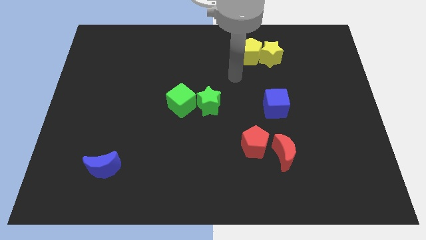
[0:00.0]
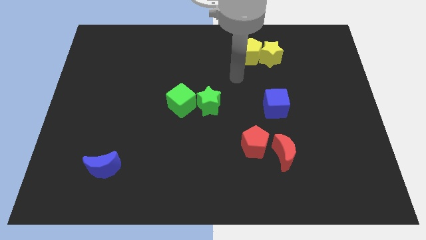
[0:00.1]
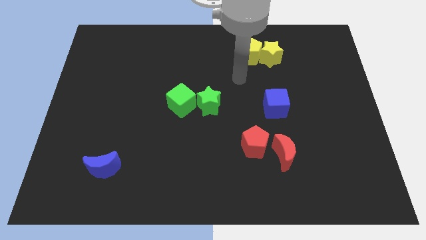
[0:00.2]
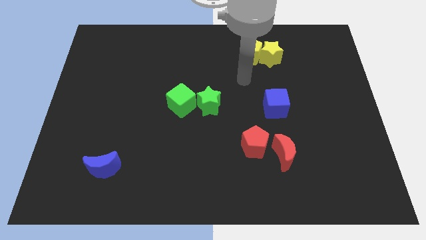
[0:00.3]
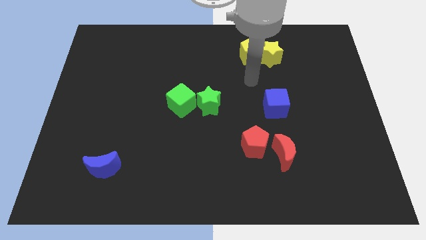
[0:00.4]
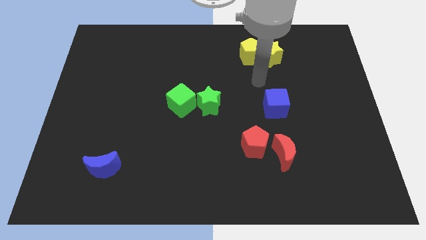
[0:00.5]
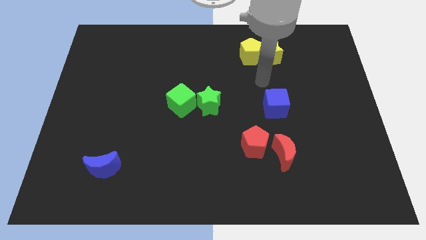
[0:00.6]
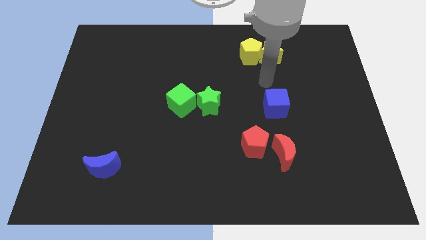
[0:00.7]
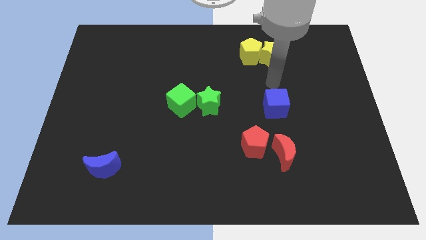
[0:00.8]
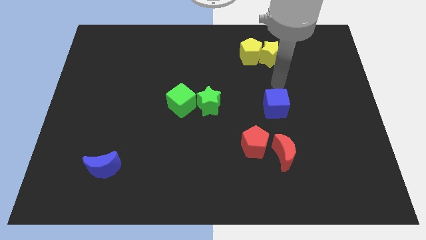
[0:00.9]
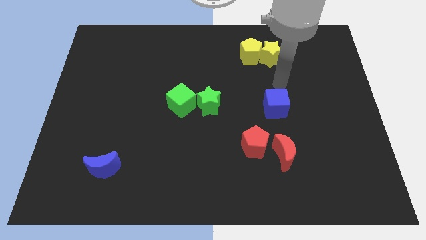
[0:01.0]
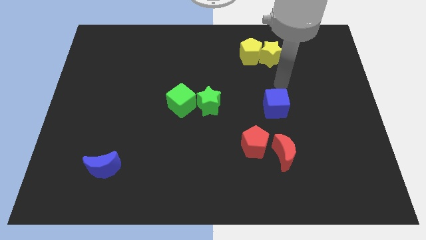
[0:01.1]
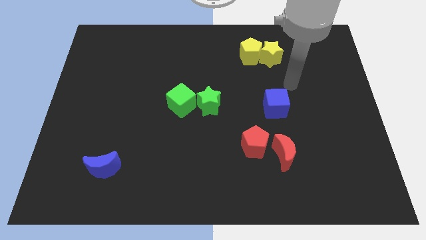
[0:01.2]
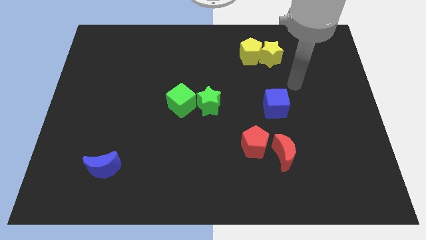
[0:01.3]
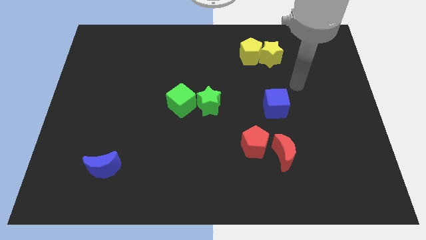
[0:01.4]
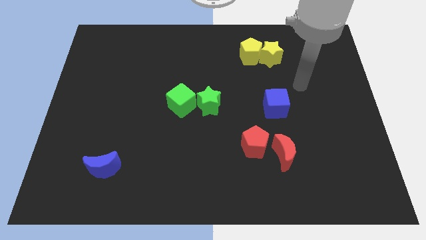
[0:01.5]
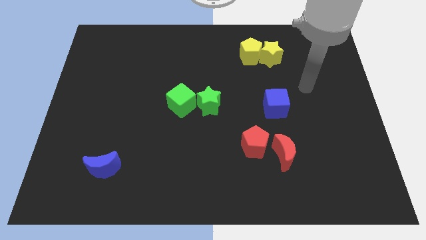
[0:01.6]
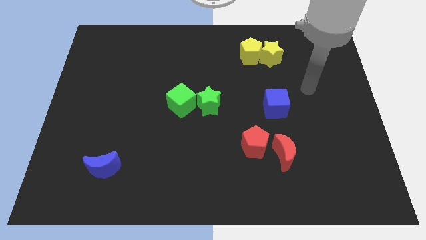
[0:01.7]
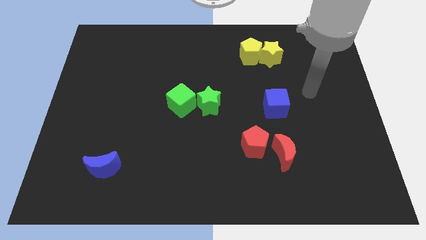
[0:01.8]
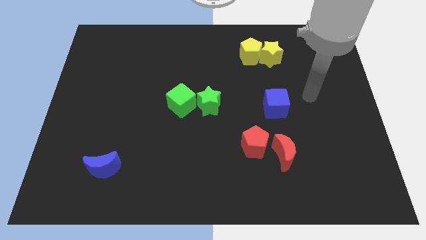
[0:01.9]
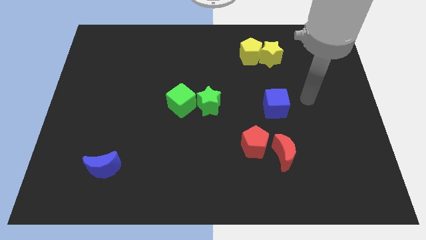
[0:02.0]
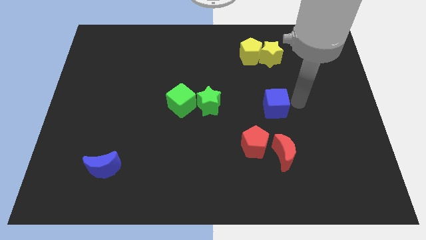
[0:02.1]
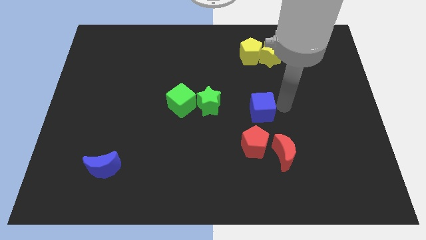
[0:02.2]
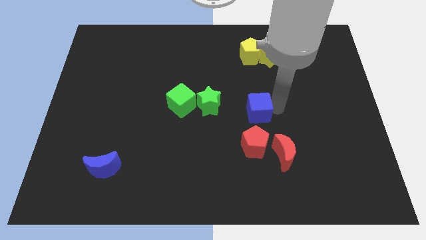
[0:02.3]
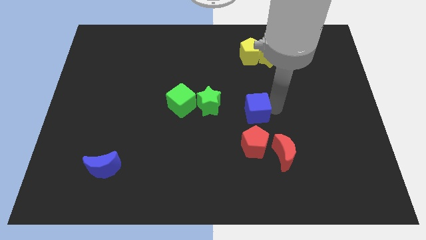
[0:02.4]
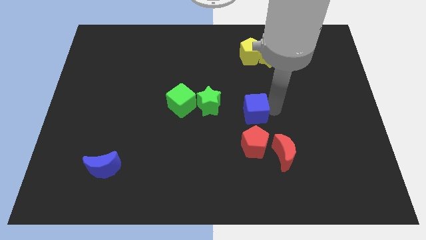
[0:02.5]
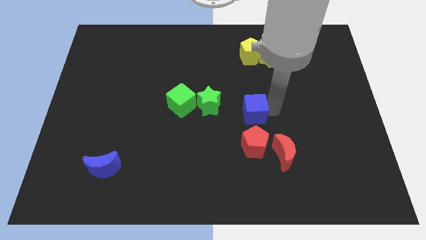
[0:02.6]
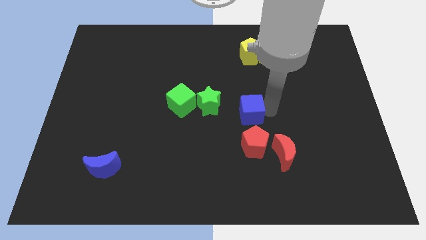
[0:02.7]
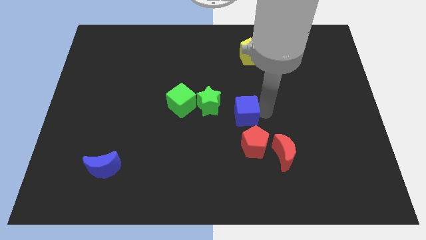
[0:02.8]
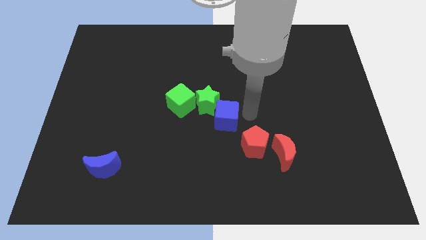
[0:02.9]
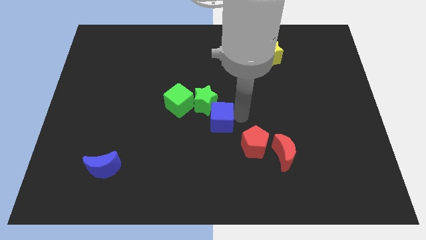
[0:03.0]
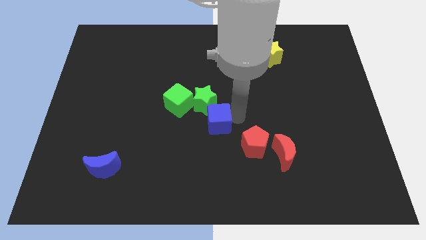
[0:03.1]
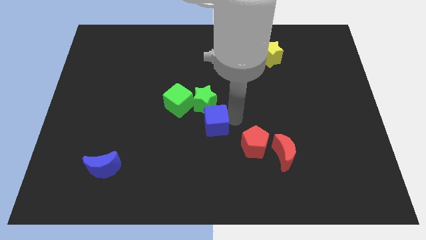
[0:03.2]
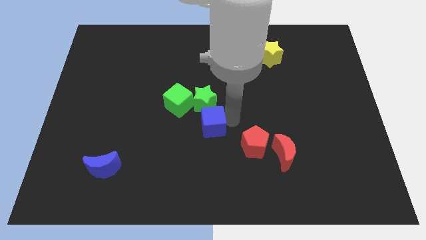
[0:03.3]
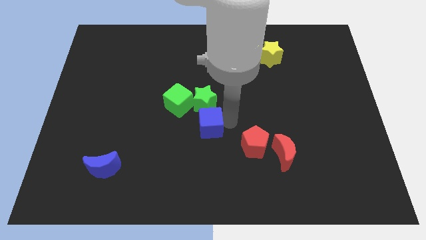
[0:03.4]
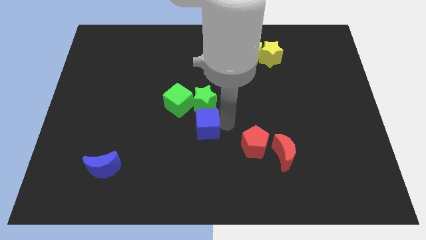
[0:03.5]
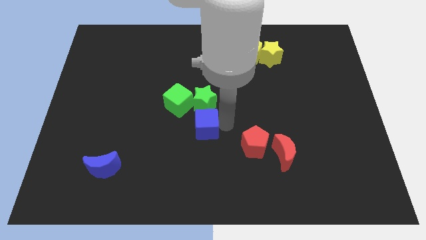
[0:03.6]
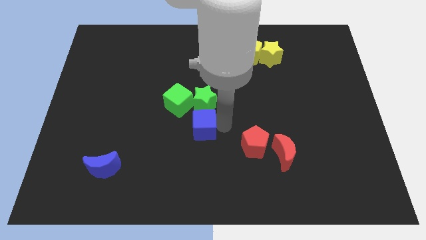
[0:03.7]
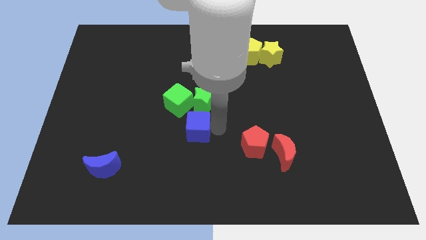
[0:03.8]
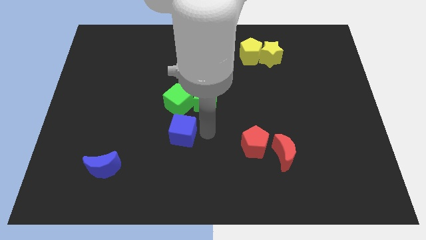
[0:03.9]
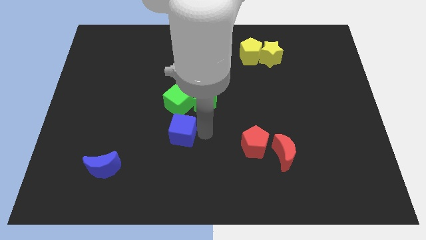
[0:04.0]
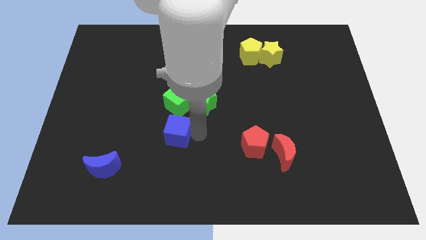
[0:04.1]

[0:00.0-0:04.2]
slide the blue cube to the bottom of the green cube

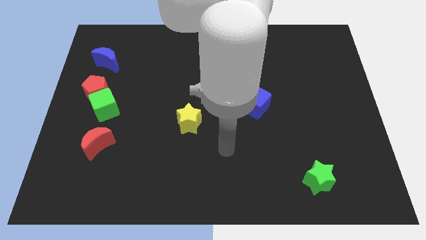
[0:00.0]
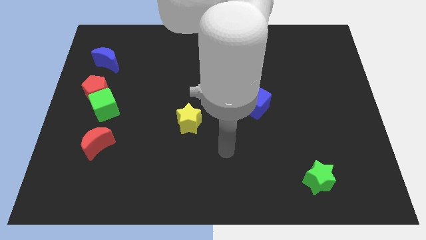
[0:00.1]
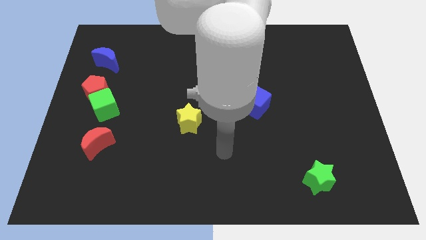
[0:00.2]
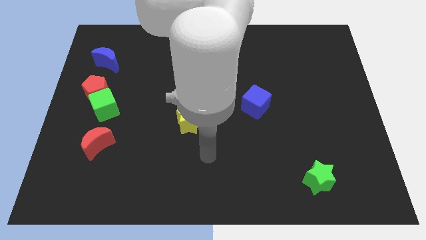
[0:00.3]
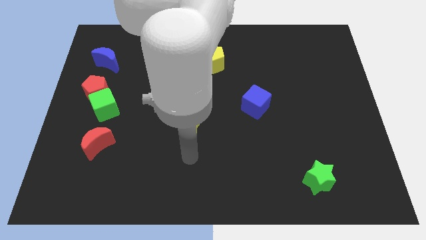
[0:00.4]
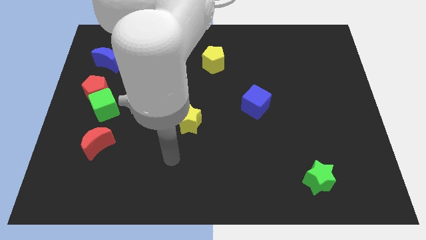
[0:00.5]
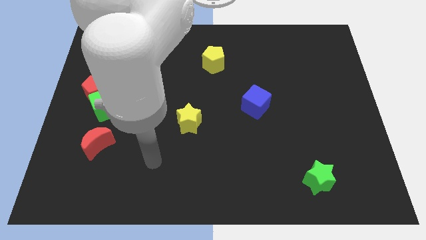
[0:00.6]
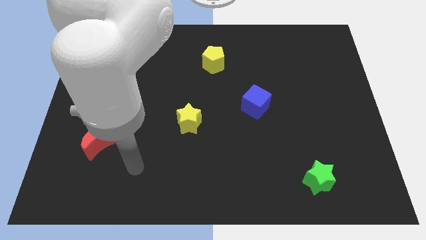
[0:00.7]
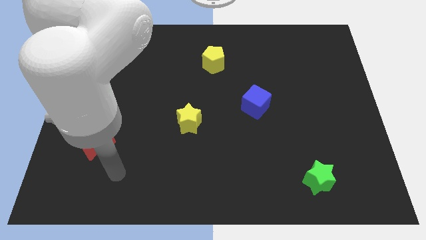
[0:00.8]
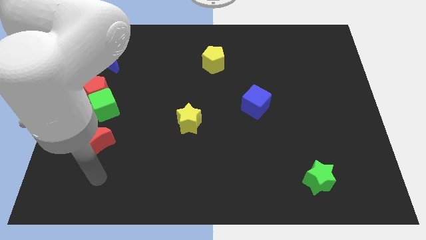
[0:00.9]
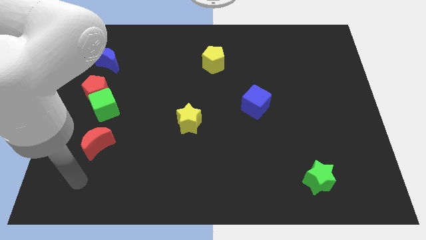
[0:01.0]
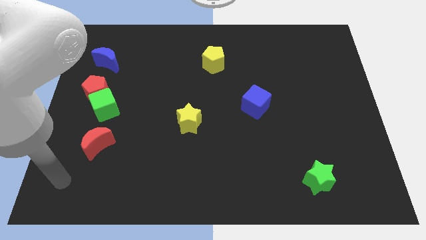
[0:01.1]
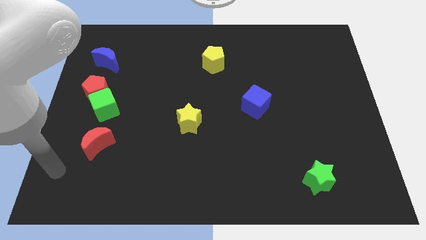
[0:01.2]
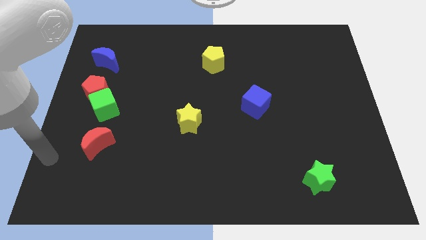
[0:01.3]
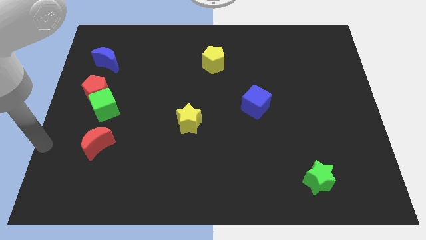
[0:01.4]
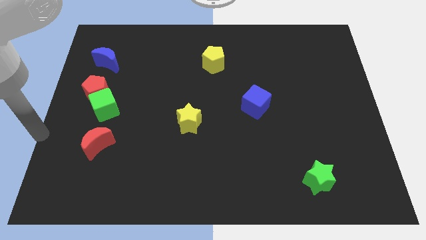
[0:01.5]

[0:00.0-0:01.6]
place your hand at left side of the red crescent

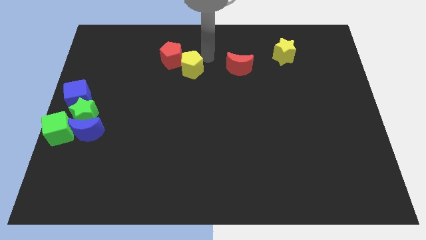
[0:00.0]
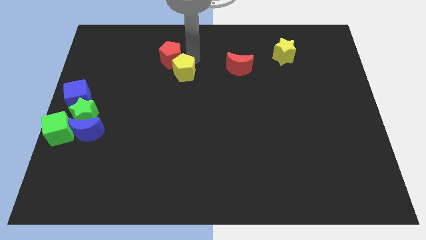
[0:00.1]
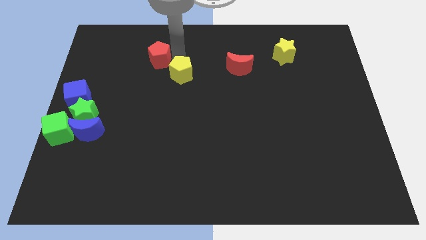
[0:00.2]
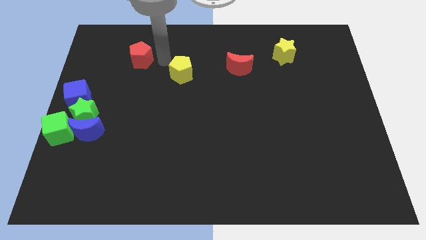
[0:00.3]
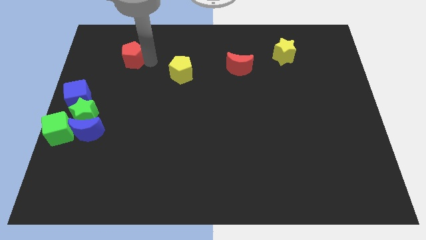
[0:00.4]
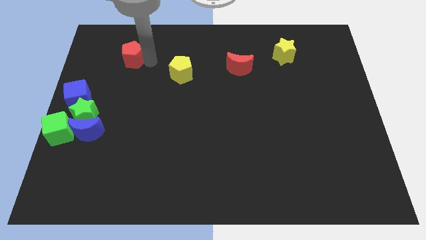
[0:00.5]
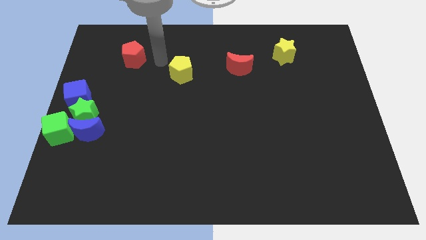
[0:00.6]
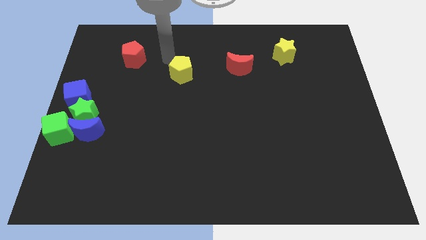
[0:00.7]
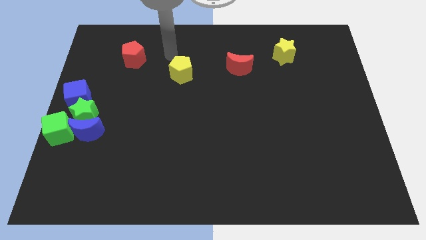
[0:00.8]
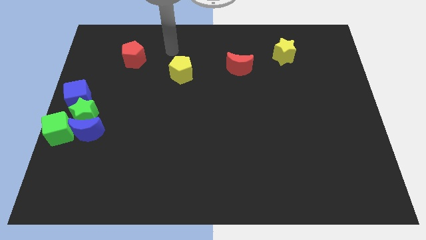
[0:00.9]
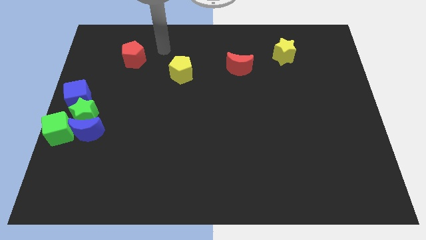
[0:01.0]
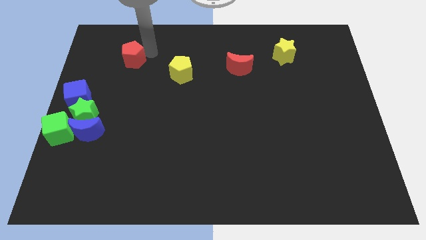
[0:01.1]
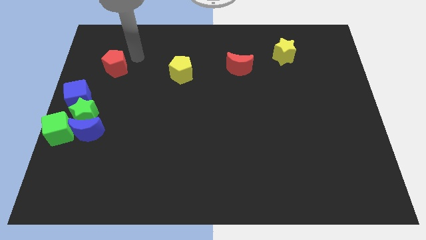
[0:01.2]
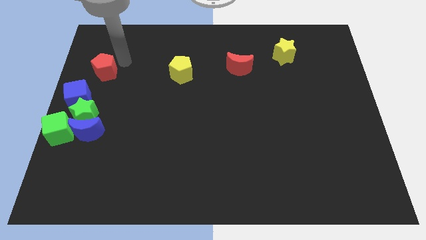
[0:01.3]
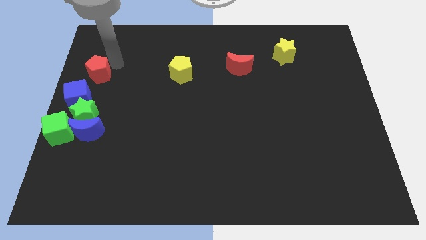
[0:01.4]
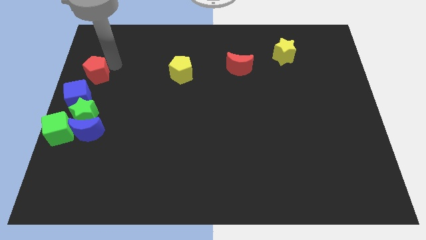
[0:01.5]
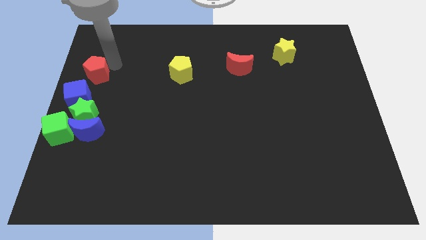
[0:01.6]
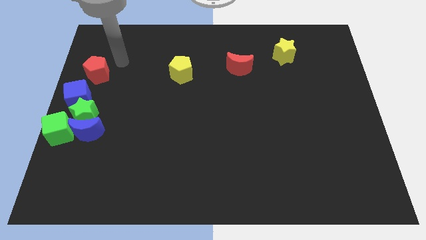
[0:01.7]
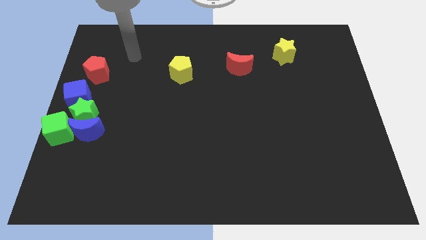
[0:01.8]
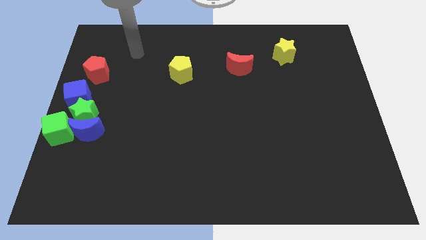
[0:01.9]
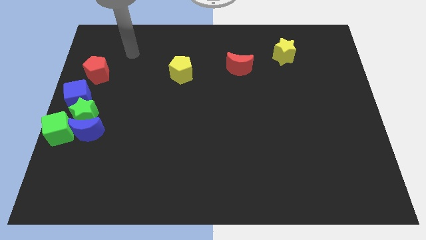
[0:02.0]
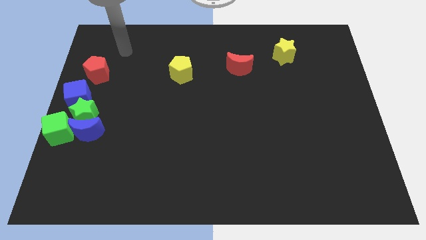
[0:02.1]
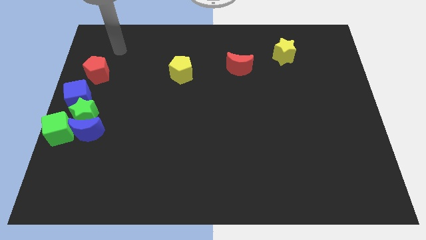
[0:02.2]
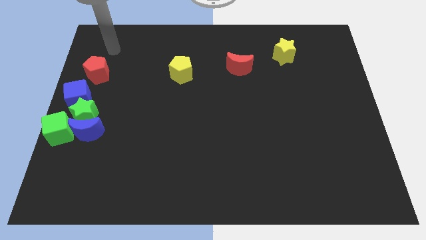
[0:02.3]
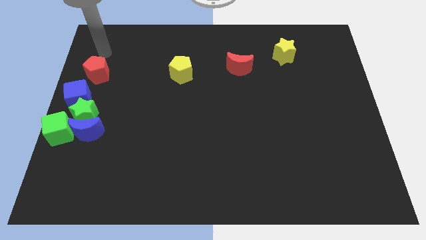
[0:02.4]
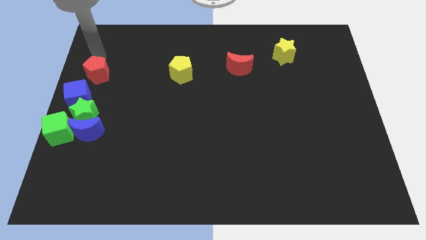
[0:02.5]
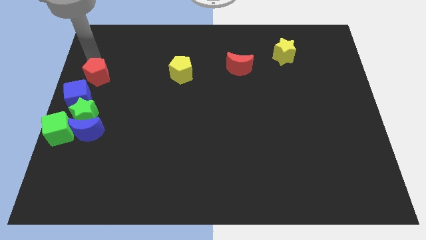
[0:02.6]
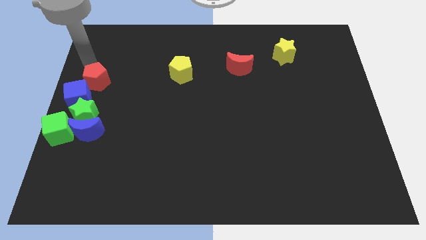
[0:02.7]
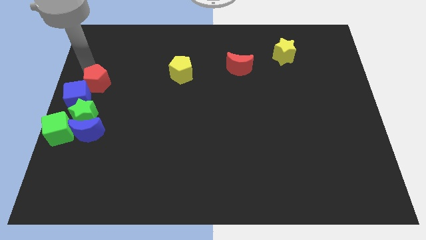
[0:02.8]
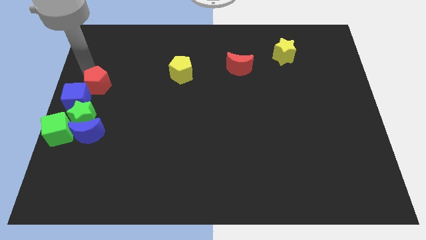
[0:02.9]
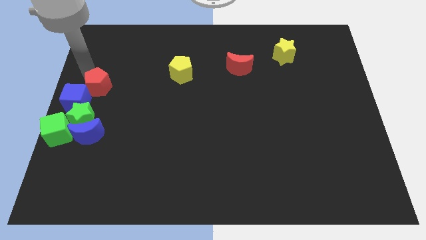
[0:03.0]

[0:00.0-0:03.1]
drag the red pentagon and place it close to the blue cube

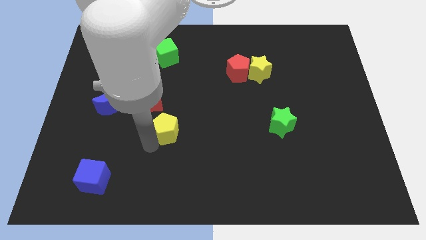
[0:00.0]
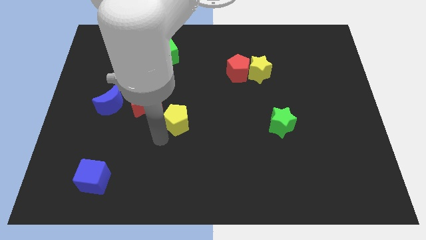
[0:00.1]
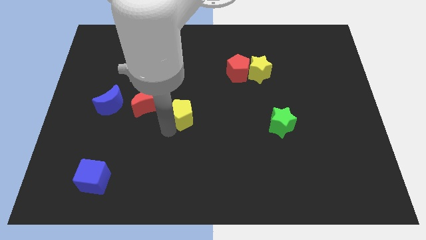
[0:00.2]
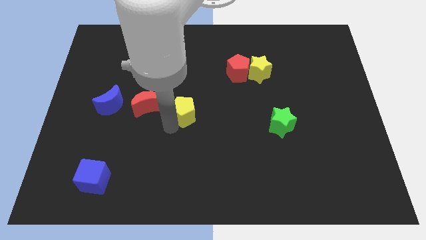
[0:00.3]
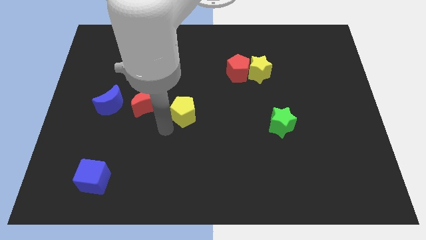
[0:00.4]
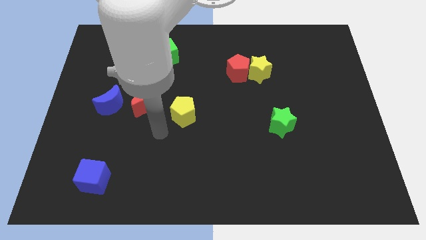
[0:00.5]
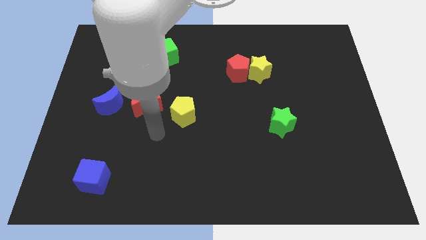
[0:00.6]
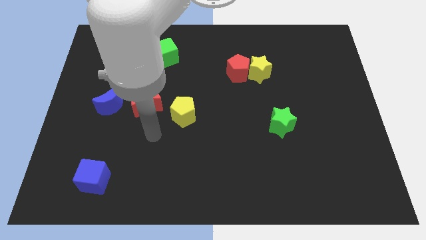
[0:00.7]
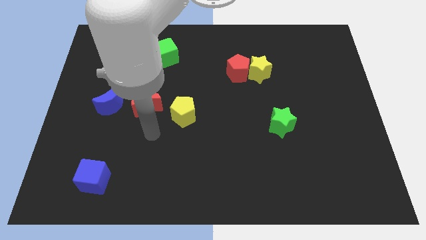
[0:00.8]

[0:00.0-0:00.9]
place yellow pentagon beside red crescent
